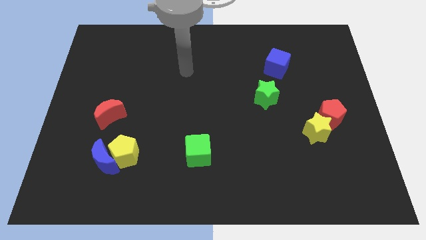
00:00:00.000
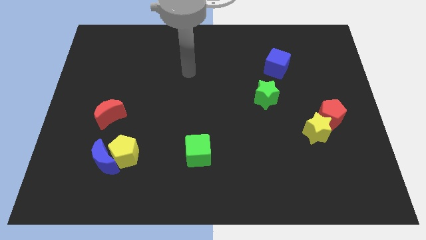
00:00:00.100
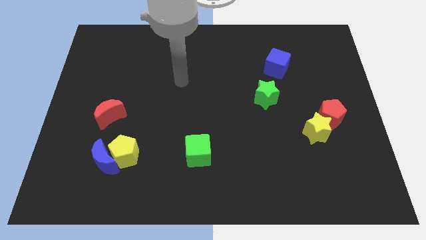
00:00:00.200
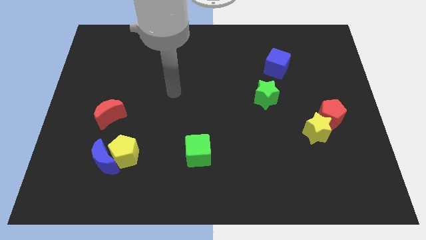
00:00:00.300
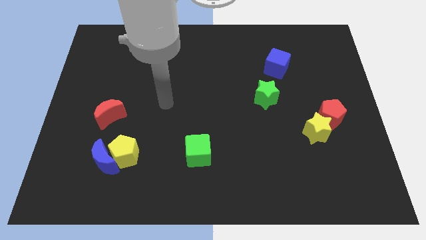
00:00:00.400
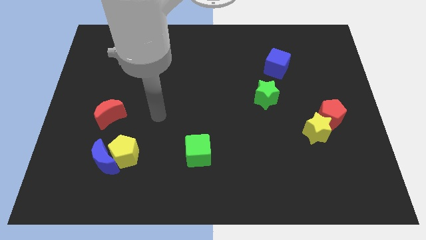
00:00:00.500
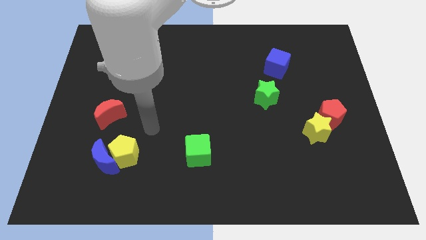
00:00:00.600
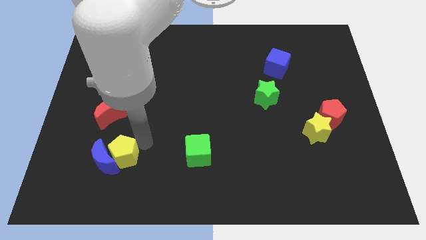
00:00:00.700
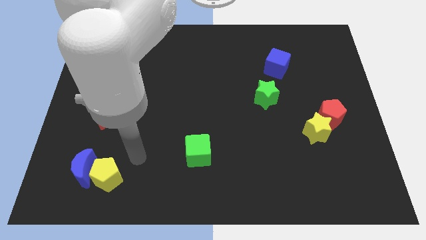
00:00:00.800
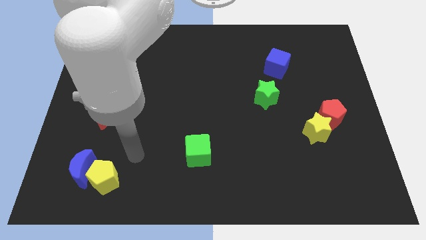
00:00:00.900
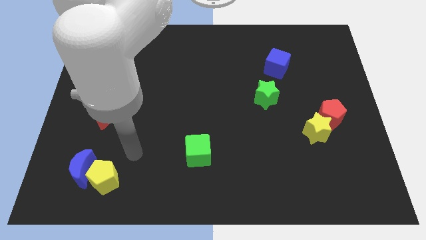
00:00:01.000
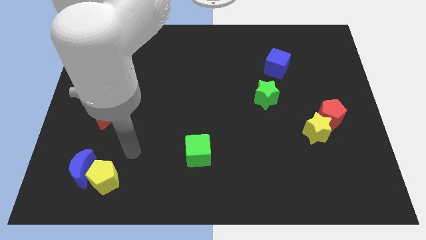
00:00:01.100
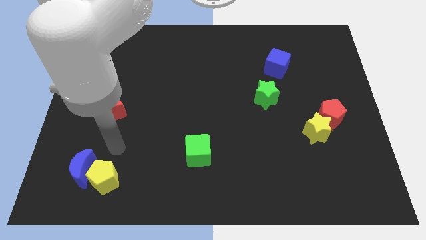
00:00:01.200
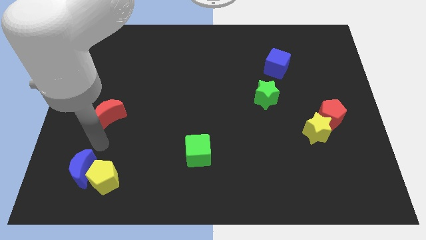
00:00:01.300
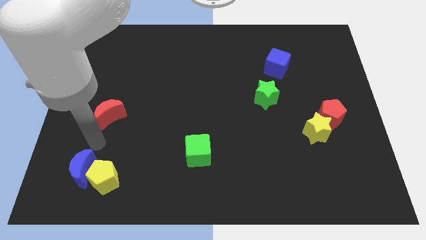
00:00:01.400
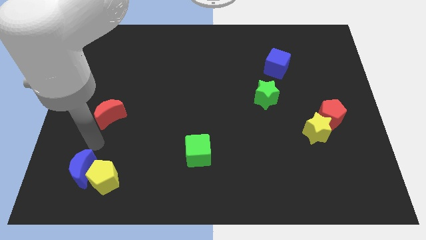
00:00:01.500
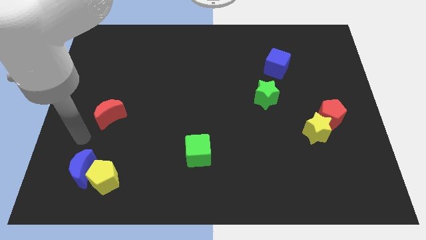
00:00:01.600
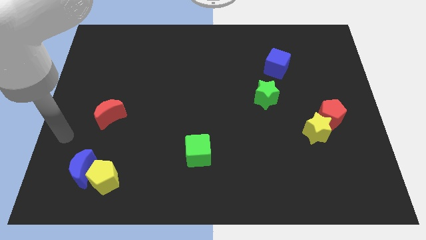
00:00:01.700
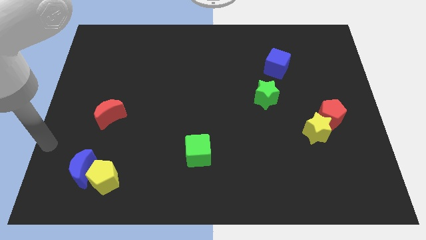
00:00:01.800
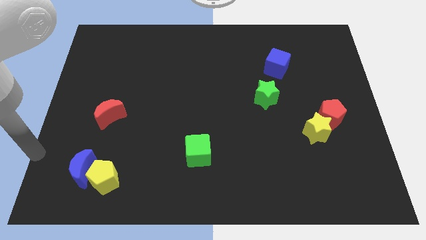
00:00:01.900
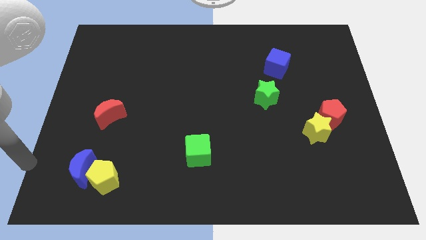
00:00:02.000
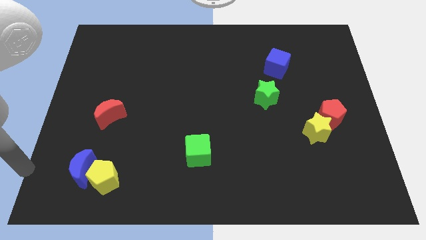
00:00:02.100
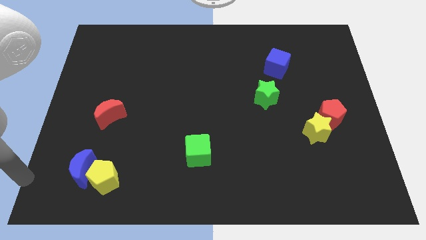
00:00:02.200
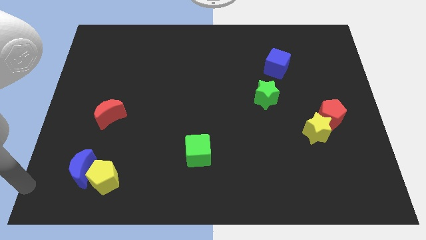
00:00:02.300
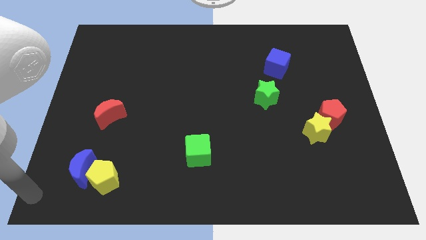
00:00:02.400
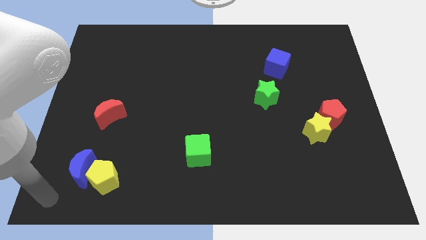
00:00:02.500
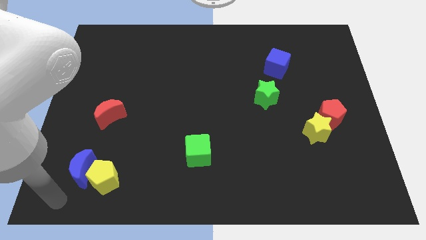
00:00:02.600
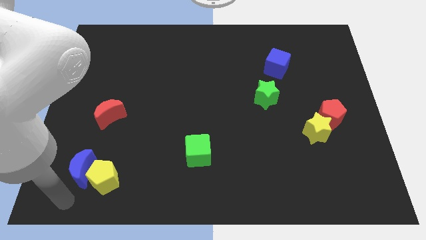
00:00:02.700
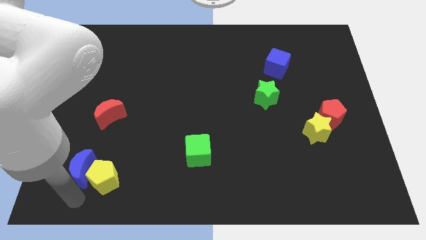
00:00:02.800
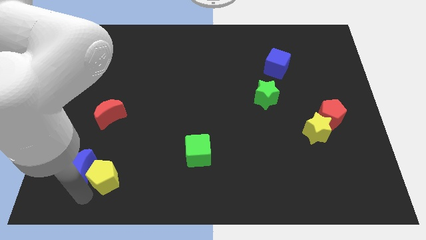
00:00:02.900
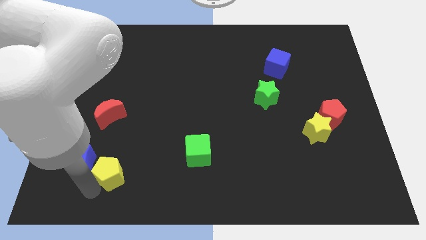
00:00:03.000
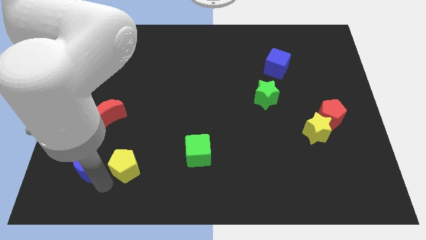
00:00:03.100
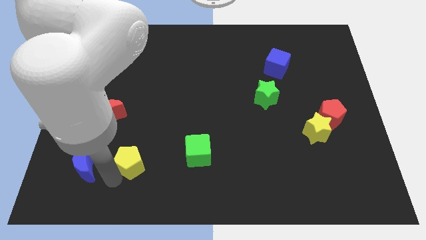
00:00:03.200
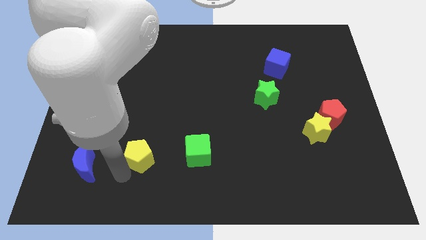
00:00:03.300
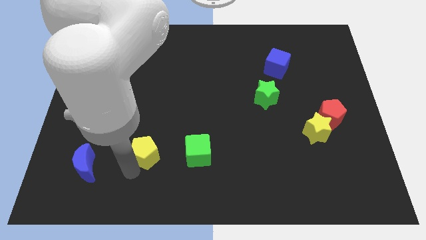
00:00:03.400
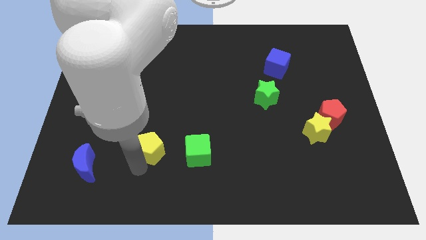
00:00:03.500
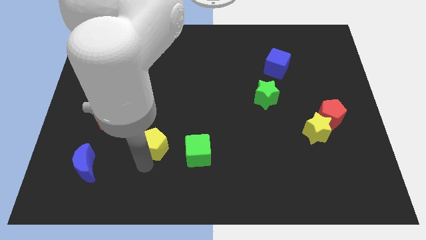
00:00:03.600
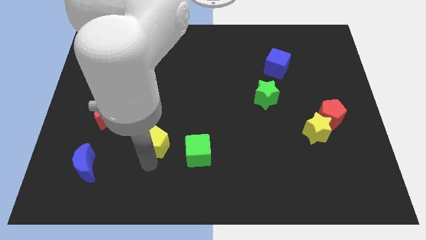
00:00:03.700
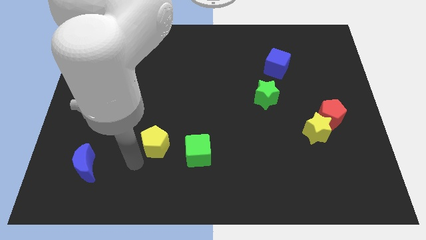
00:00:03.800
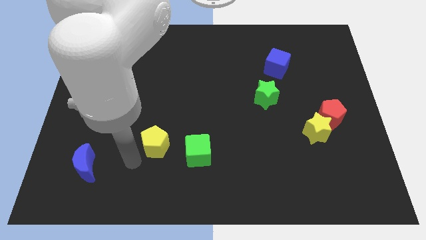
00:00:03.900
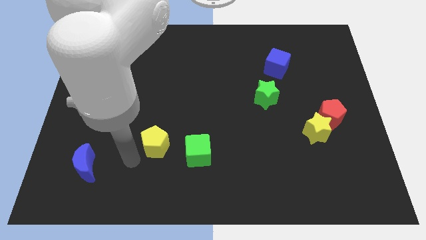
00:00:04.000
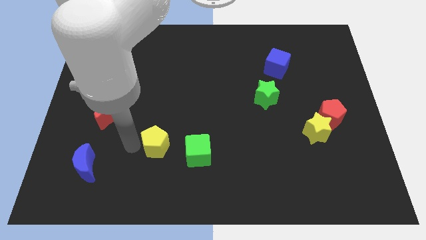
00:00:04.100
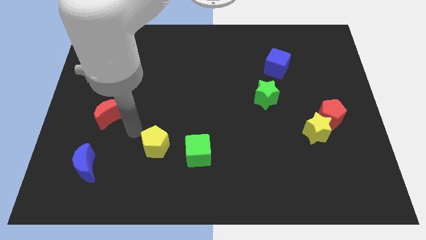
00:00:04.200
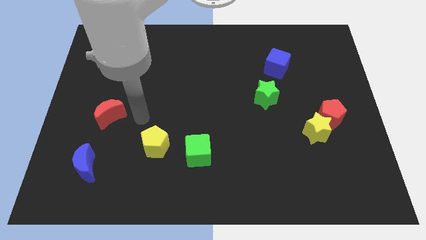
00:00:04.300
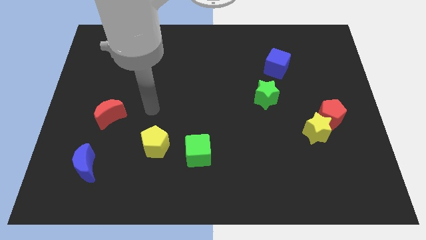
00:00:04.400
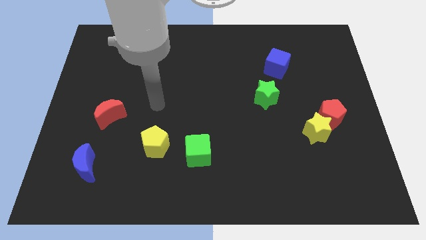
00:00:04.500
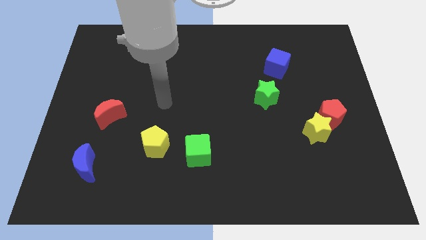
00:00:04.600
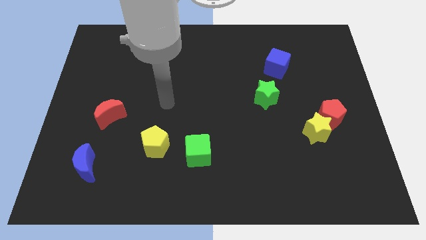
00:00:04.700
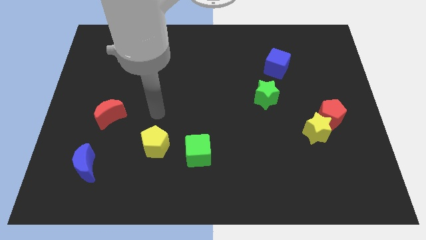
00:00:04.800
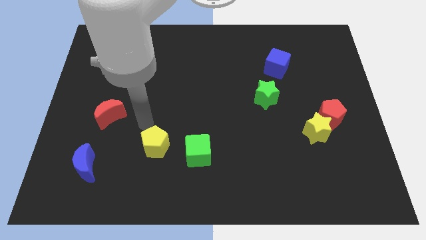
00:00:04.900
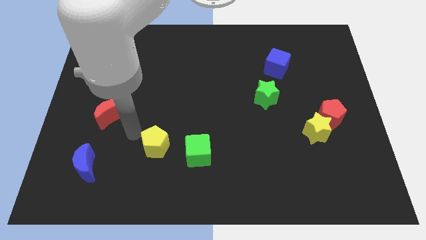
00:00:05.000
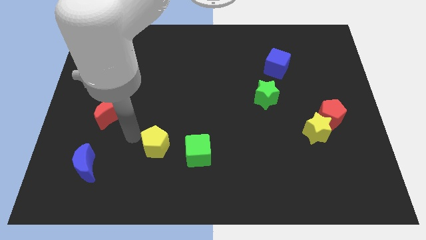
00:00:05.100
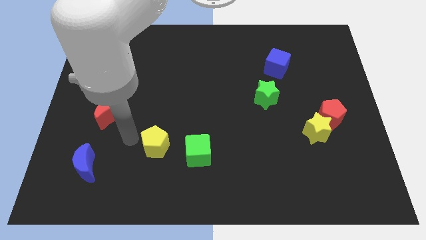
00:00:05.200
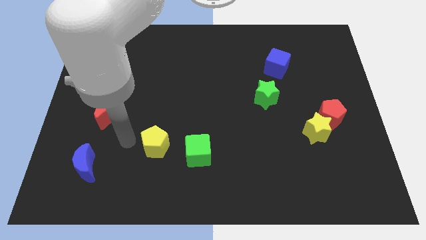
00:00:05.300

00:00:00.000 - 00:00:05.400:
move the yellow pentagon to the top of the board

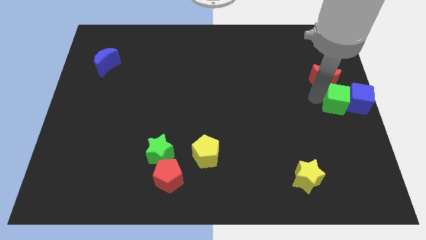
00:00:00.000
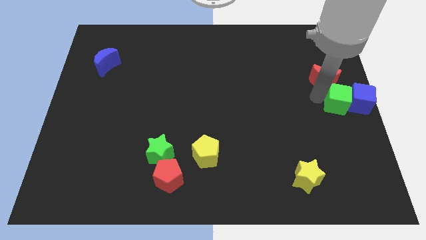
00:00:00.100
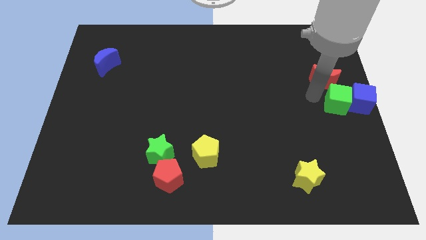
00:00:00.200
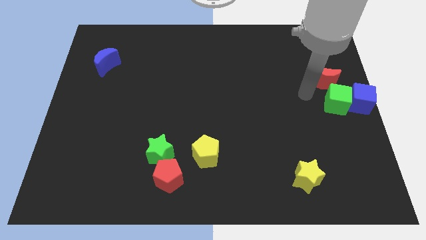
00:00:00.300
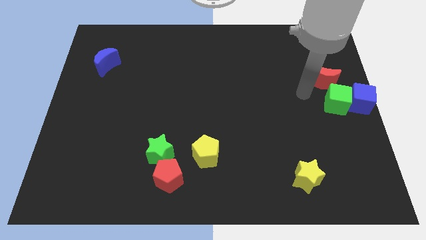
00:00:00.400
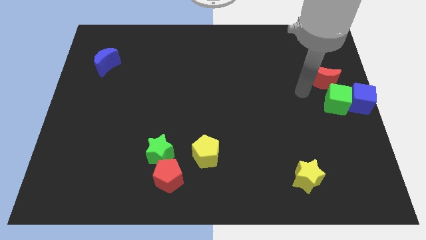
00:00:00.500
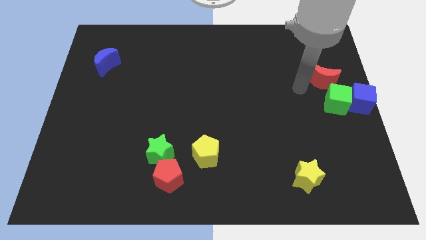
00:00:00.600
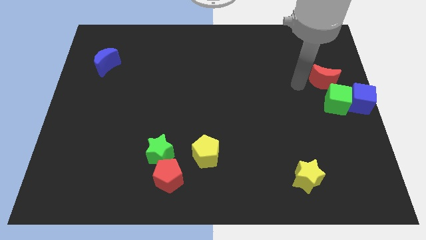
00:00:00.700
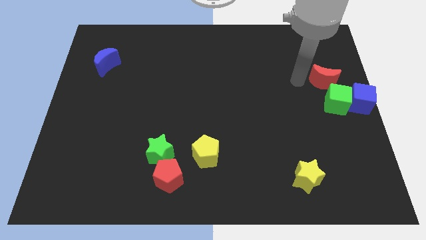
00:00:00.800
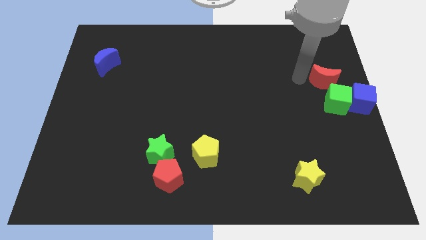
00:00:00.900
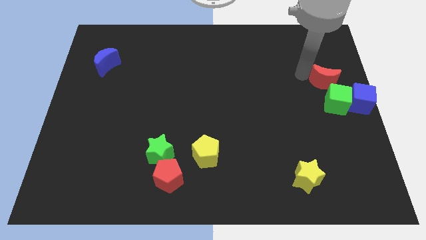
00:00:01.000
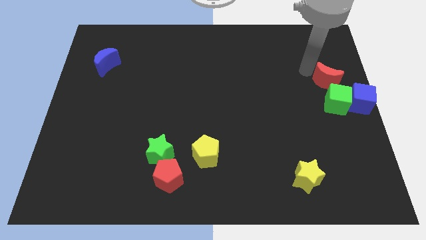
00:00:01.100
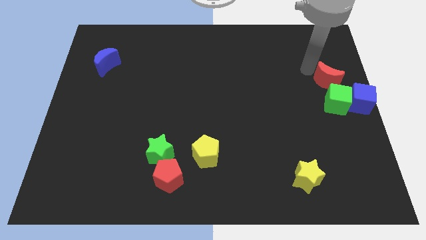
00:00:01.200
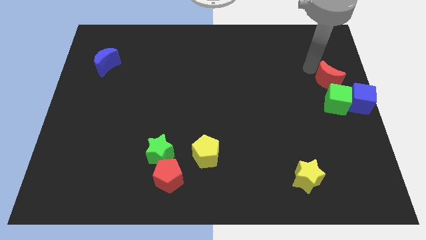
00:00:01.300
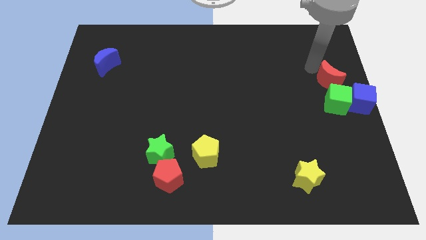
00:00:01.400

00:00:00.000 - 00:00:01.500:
push red moon slightly to the right

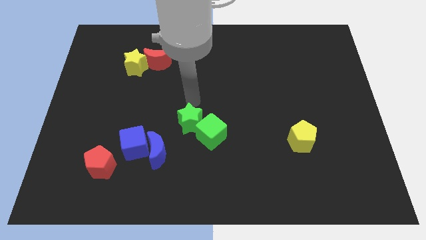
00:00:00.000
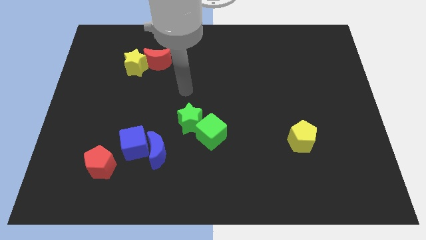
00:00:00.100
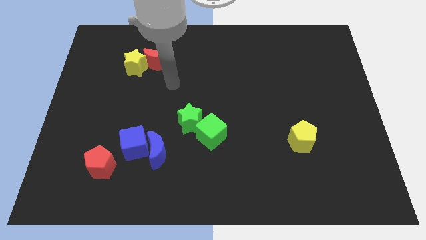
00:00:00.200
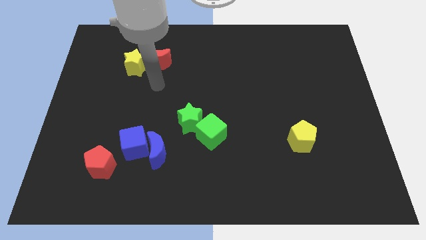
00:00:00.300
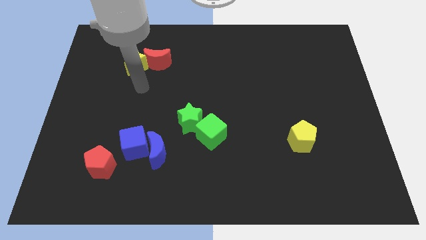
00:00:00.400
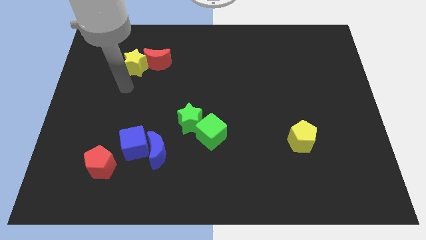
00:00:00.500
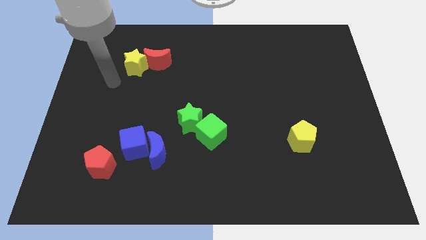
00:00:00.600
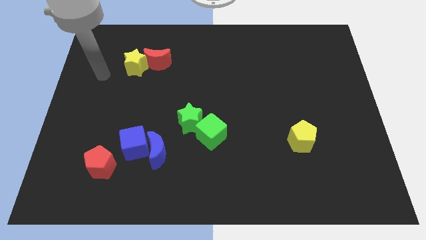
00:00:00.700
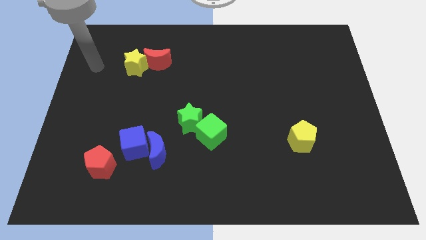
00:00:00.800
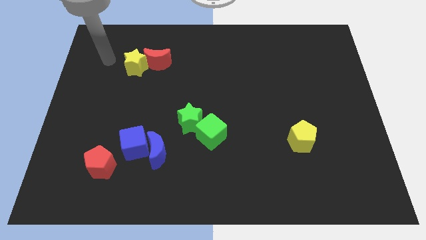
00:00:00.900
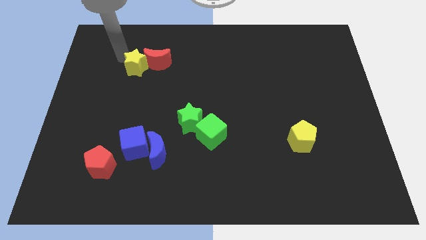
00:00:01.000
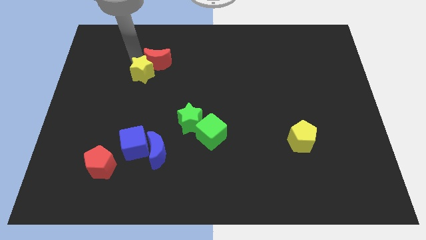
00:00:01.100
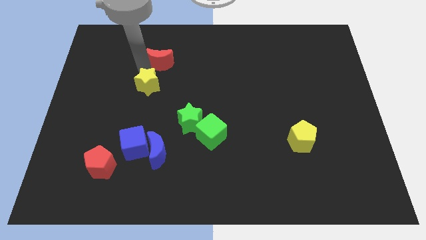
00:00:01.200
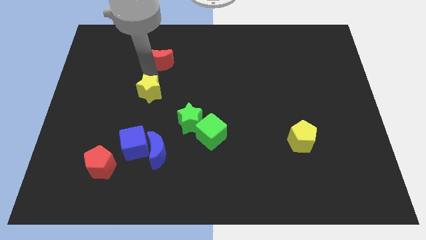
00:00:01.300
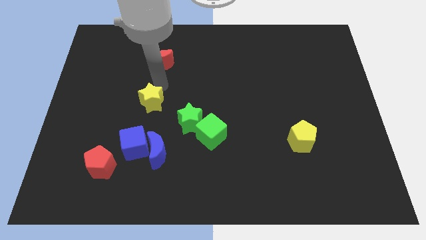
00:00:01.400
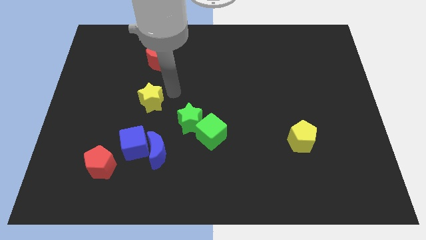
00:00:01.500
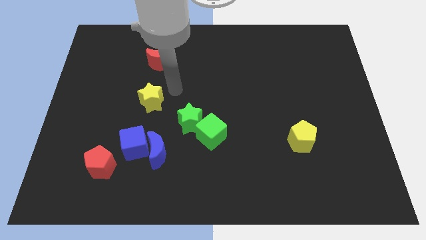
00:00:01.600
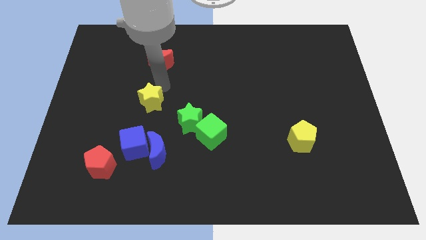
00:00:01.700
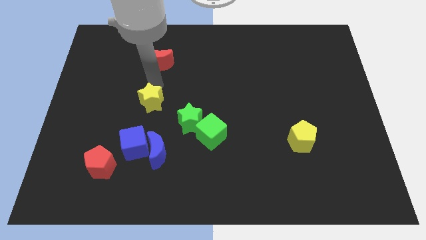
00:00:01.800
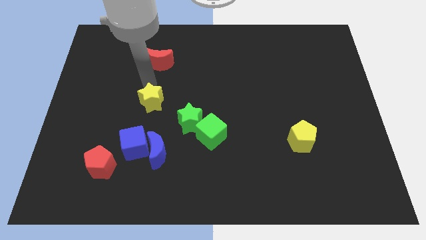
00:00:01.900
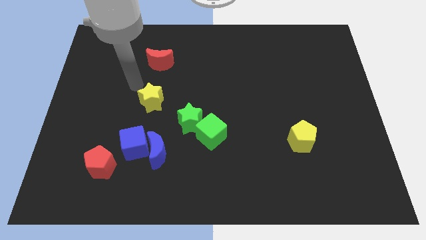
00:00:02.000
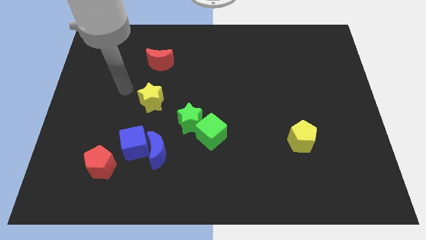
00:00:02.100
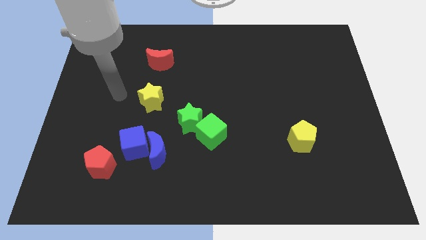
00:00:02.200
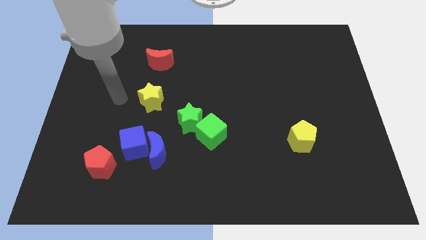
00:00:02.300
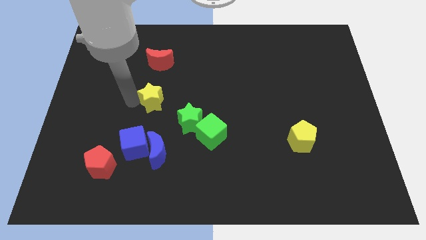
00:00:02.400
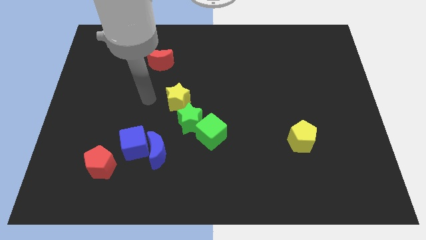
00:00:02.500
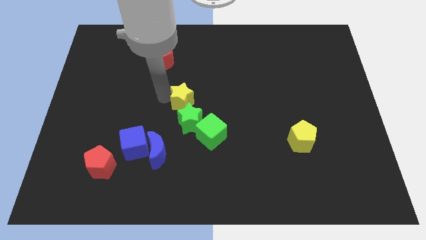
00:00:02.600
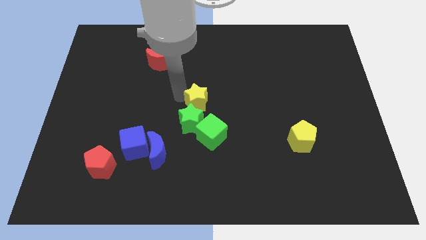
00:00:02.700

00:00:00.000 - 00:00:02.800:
push yellow star above green star
